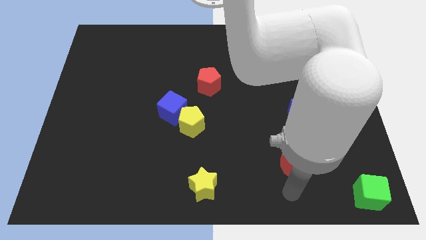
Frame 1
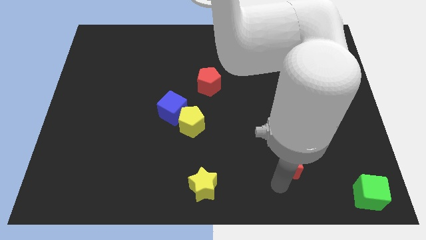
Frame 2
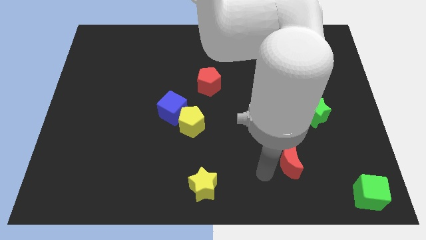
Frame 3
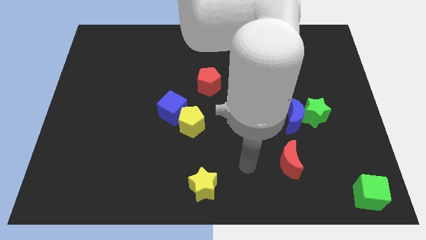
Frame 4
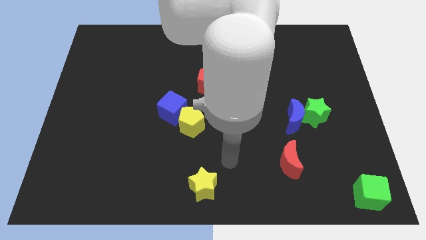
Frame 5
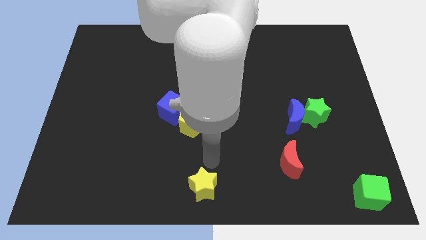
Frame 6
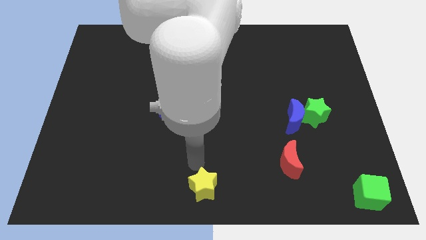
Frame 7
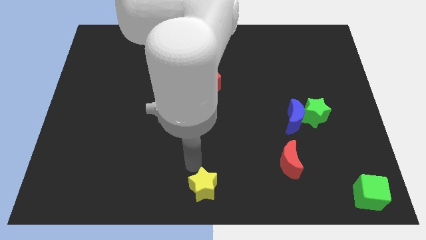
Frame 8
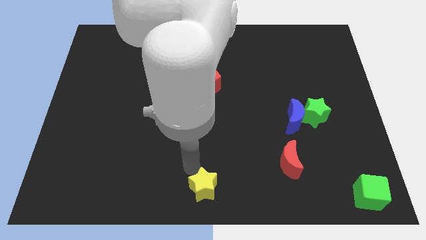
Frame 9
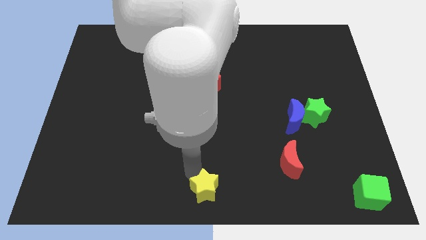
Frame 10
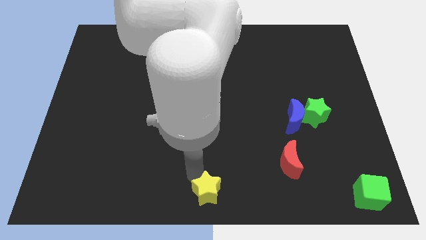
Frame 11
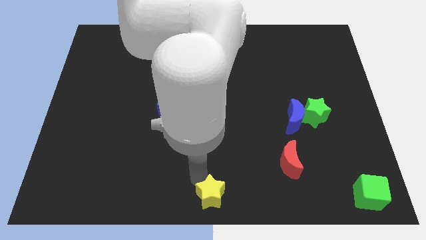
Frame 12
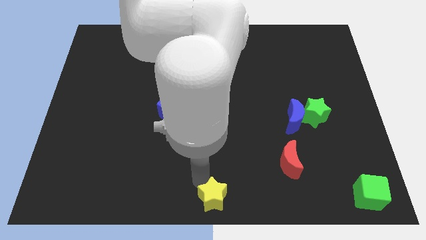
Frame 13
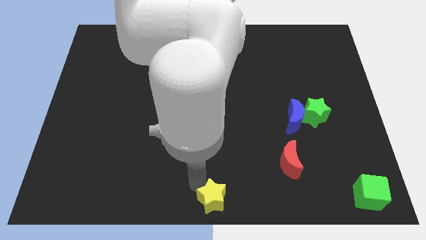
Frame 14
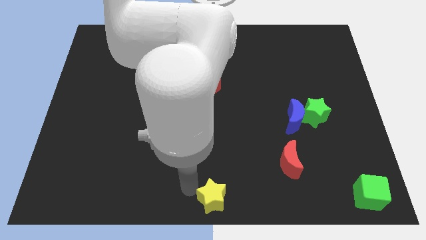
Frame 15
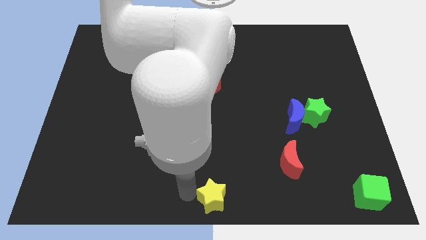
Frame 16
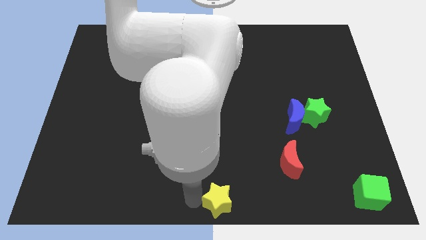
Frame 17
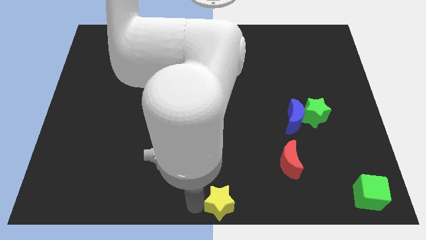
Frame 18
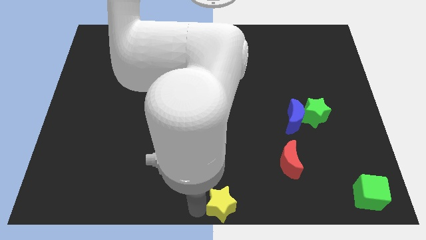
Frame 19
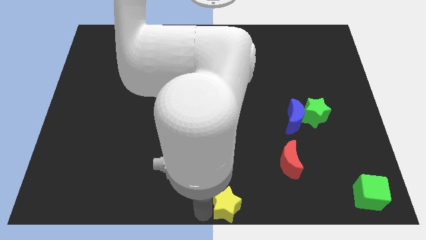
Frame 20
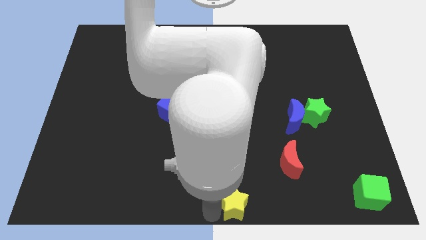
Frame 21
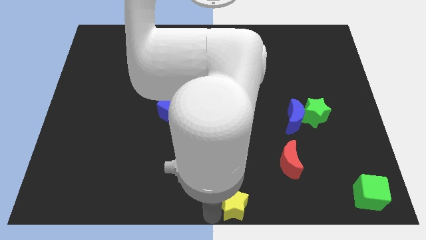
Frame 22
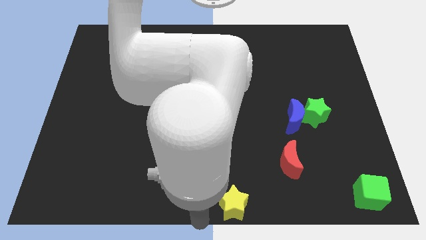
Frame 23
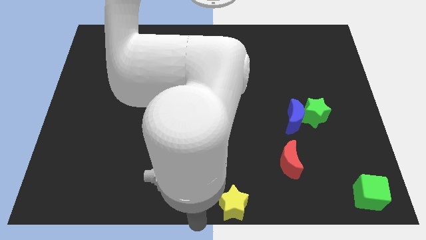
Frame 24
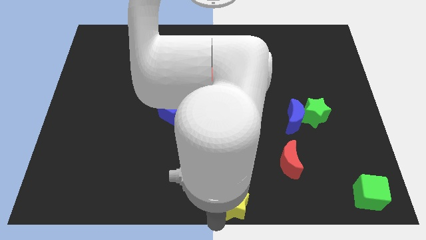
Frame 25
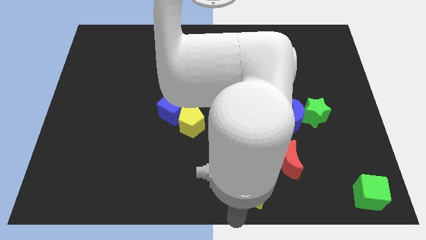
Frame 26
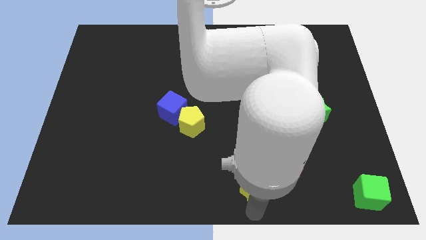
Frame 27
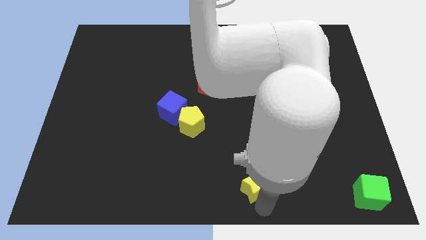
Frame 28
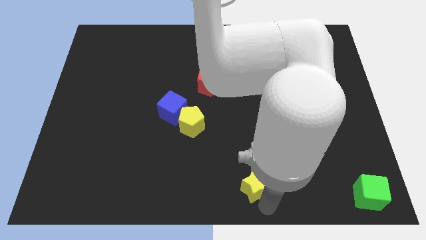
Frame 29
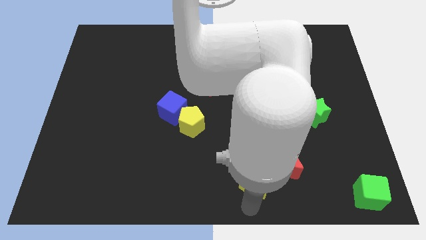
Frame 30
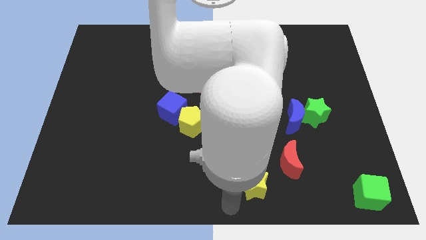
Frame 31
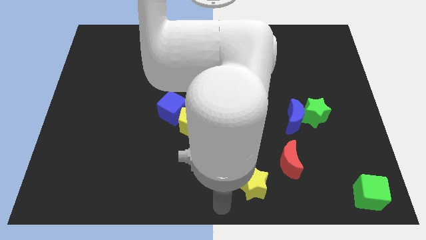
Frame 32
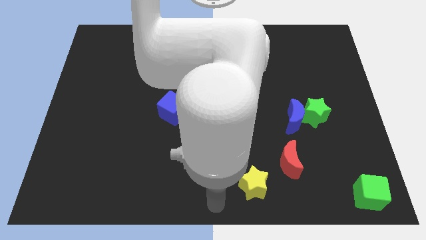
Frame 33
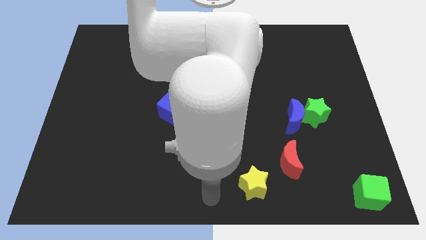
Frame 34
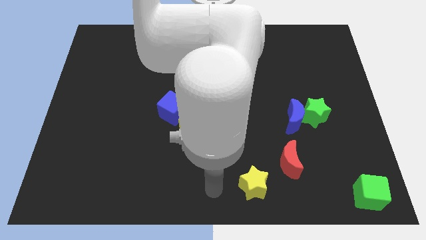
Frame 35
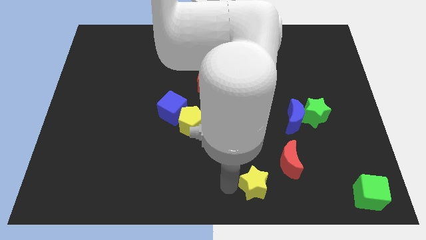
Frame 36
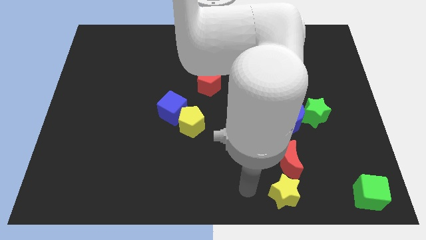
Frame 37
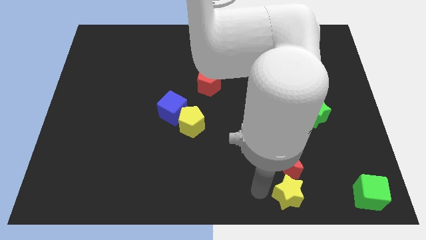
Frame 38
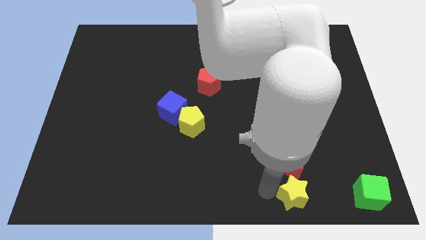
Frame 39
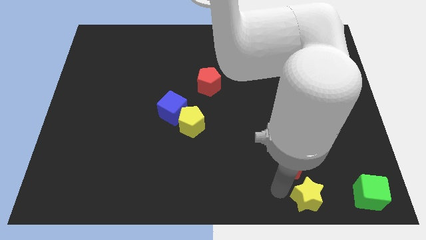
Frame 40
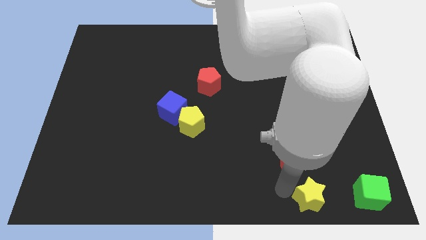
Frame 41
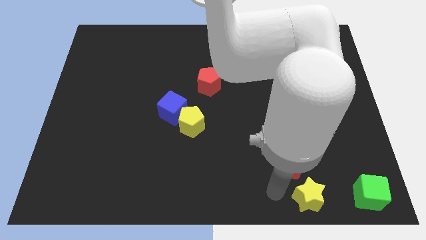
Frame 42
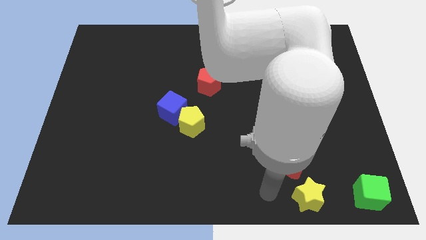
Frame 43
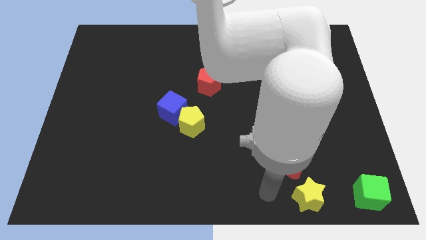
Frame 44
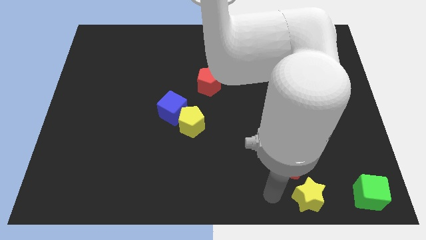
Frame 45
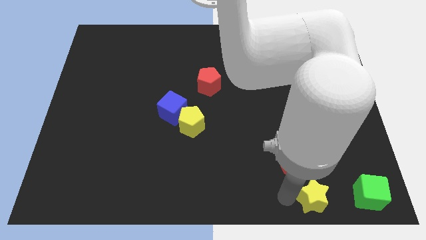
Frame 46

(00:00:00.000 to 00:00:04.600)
push the yellow star horizontally to the left side of the green cube

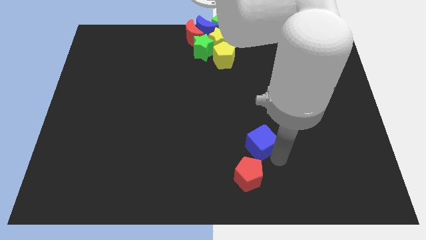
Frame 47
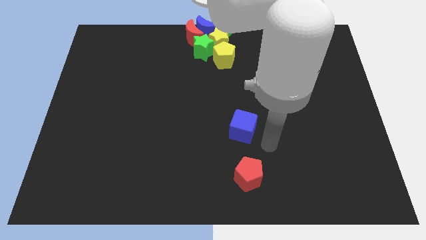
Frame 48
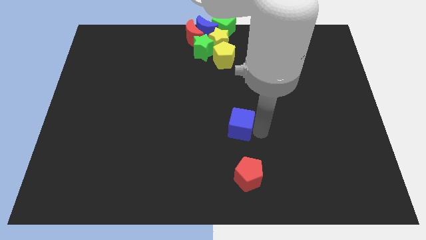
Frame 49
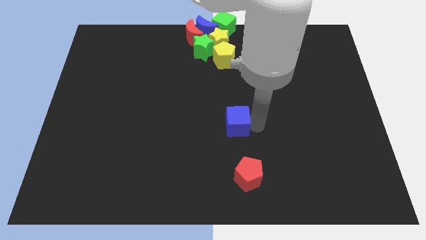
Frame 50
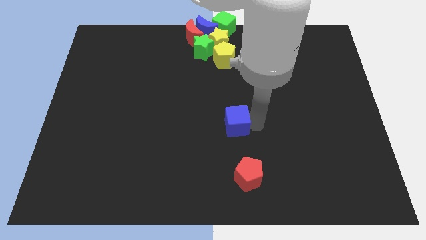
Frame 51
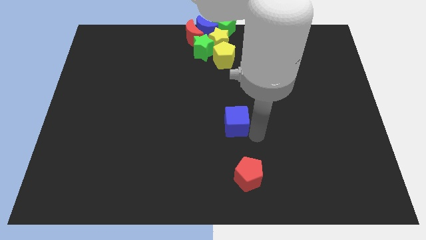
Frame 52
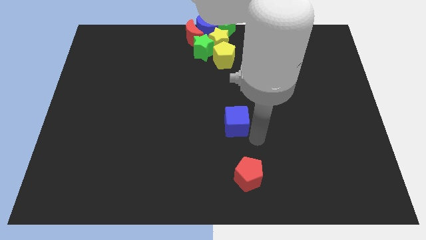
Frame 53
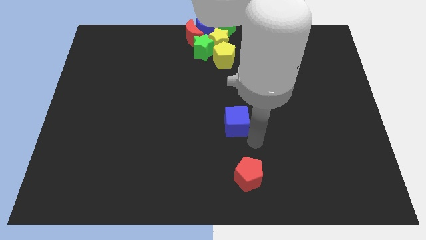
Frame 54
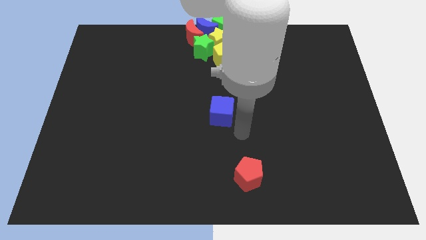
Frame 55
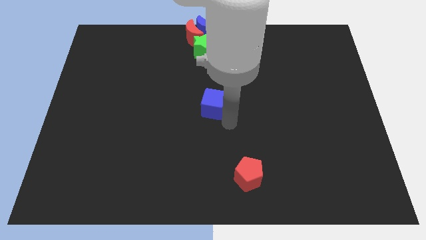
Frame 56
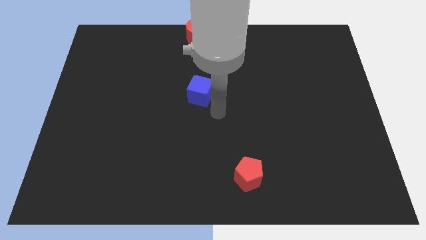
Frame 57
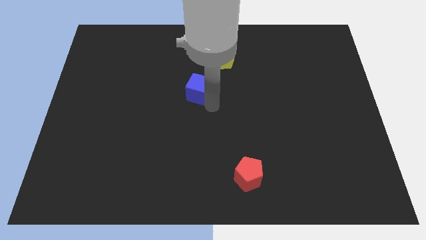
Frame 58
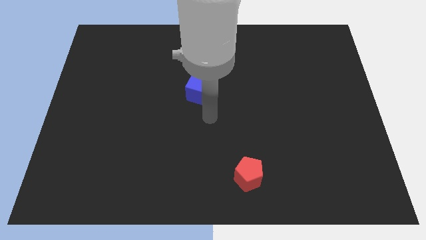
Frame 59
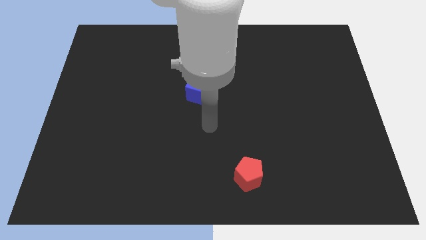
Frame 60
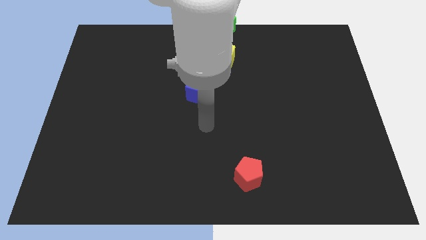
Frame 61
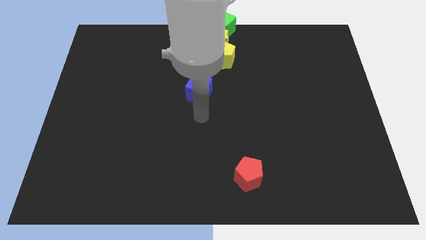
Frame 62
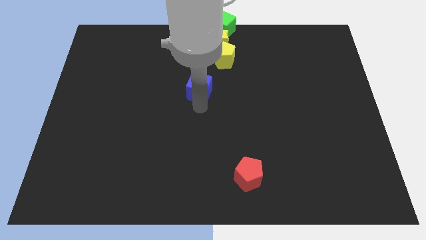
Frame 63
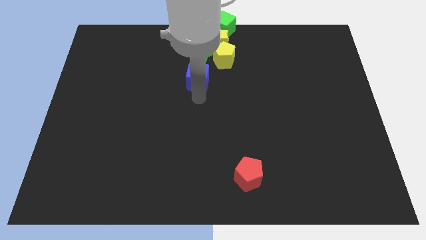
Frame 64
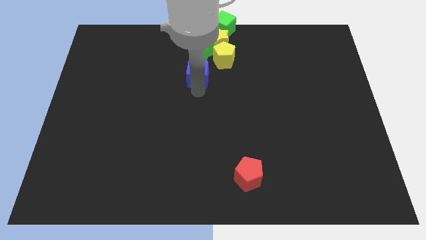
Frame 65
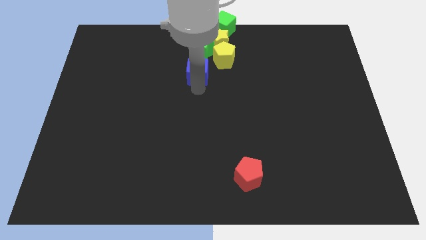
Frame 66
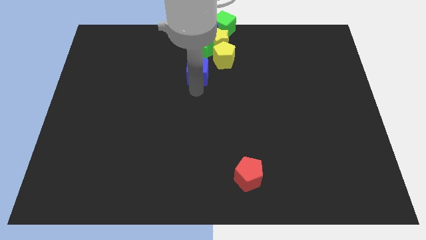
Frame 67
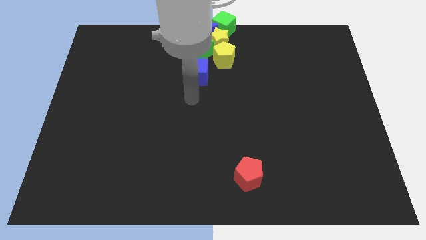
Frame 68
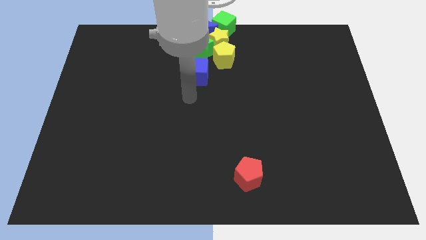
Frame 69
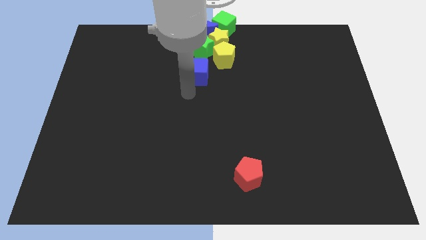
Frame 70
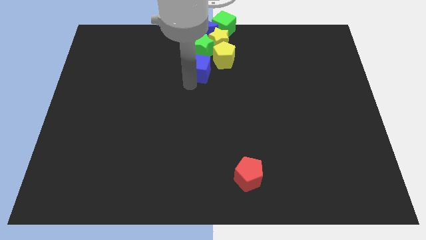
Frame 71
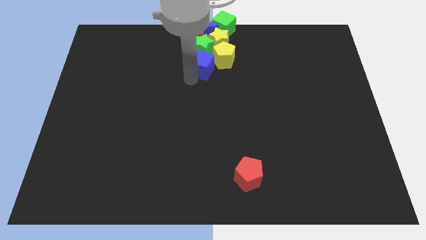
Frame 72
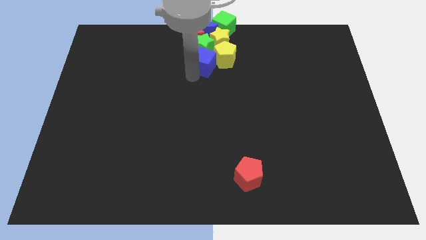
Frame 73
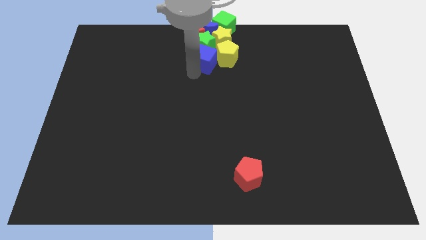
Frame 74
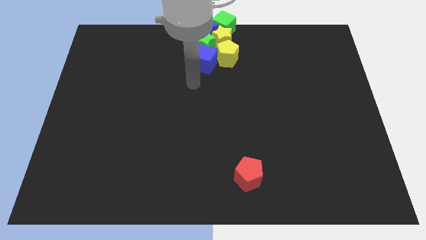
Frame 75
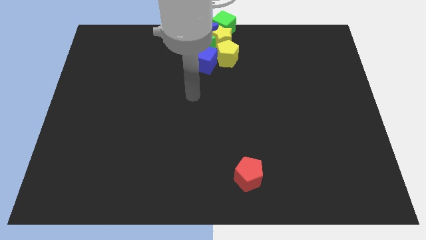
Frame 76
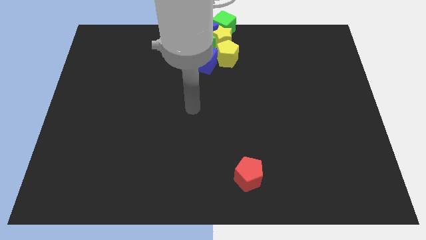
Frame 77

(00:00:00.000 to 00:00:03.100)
push the blue cube into the green star

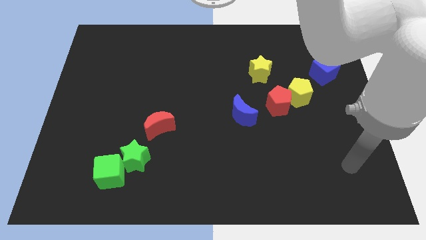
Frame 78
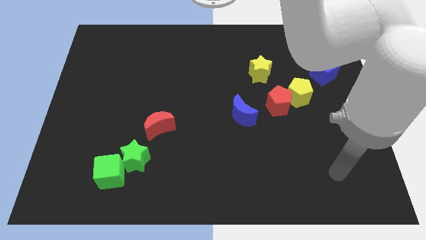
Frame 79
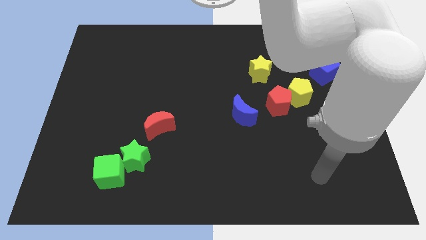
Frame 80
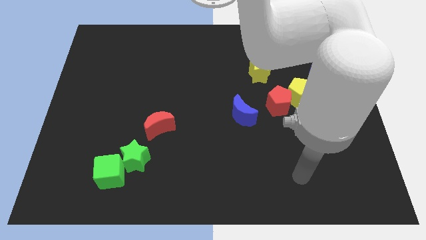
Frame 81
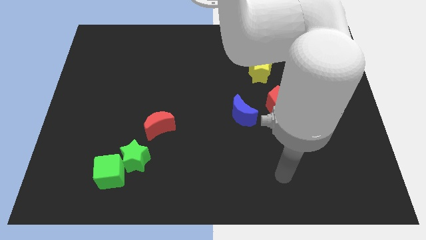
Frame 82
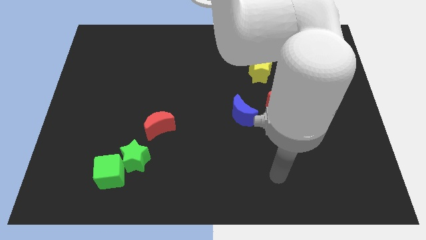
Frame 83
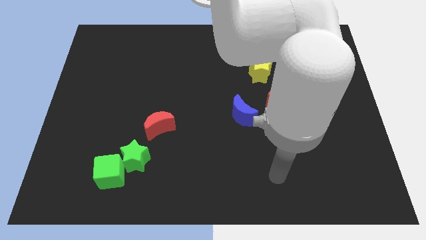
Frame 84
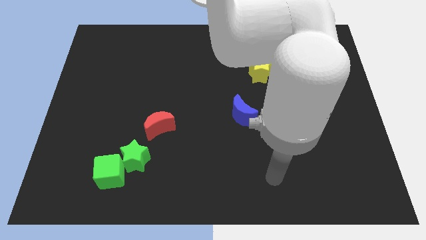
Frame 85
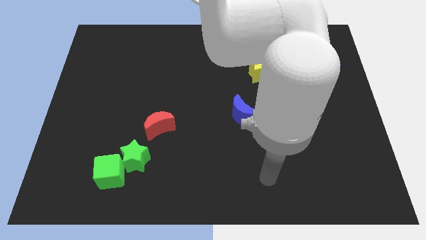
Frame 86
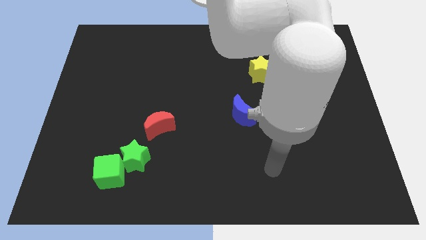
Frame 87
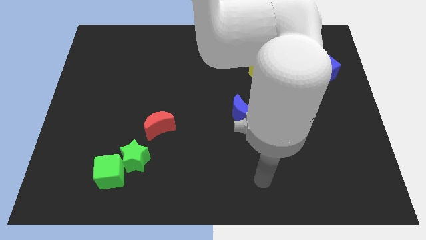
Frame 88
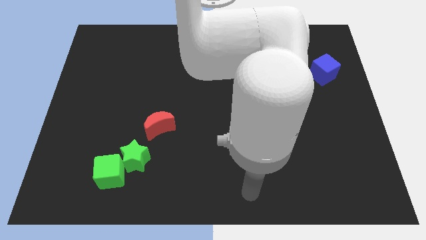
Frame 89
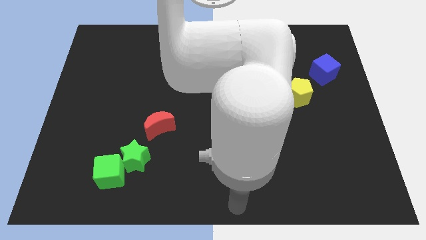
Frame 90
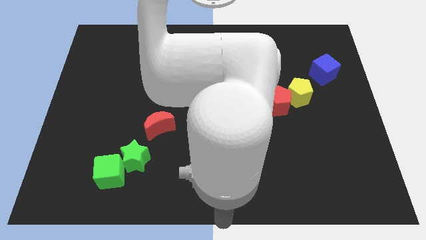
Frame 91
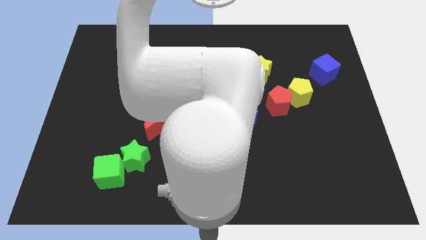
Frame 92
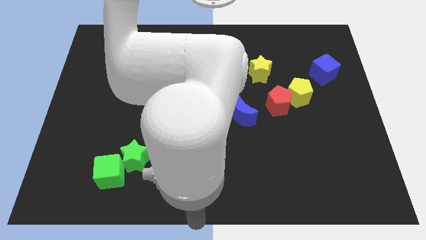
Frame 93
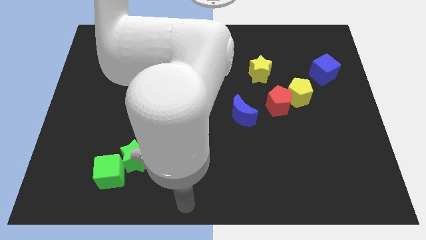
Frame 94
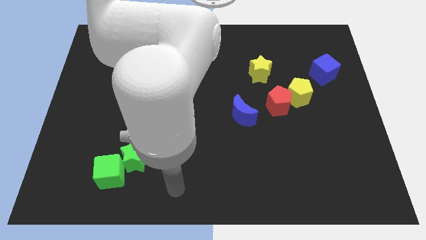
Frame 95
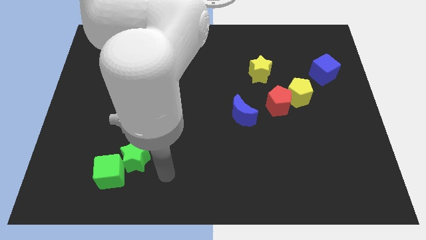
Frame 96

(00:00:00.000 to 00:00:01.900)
move your arm towards the green star
